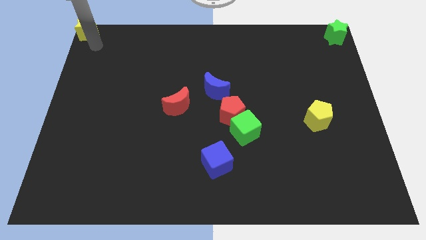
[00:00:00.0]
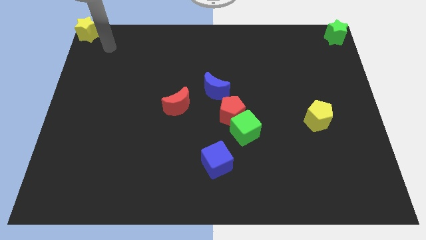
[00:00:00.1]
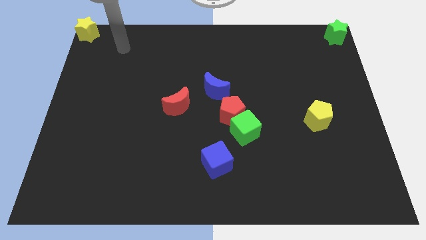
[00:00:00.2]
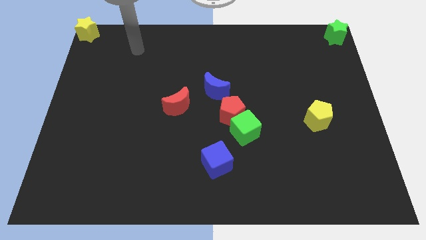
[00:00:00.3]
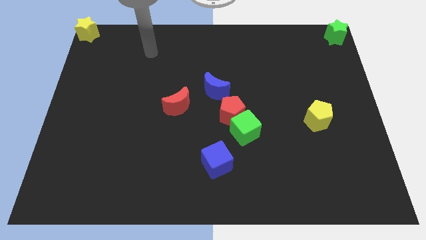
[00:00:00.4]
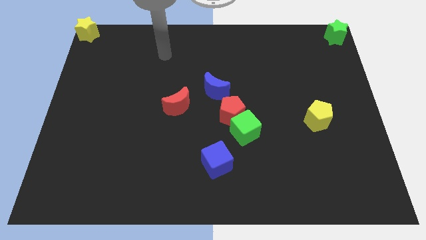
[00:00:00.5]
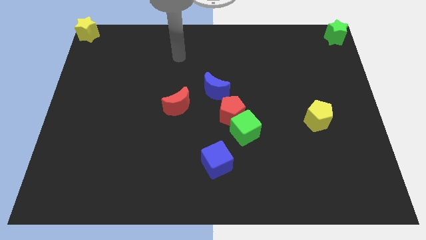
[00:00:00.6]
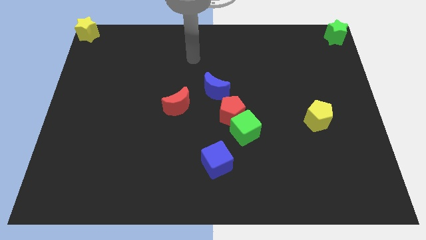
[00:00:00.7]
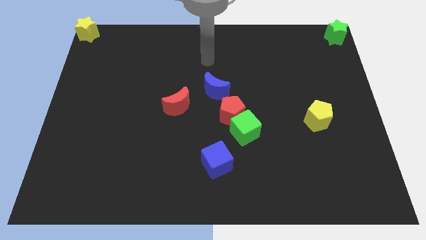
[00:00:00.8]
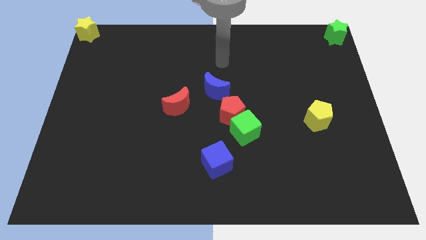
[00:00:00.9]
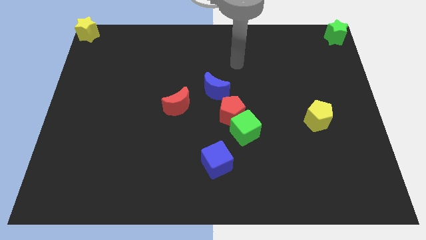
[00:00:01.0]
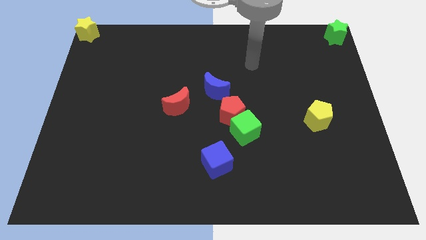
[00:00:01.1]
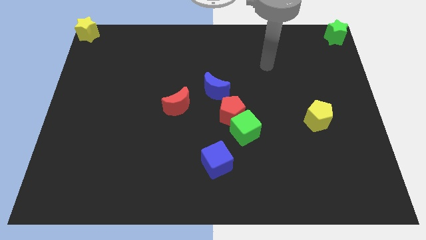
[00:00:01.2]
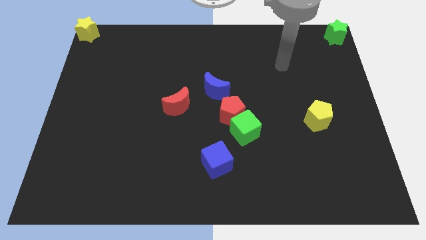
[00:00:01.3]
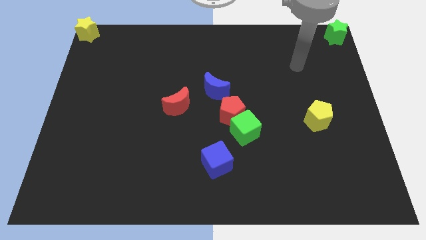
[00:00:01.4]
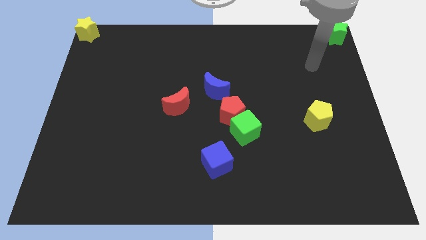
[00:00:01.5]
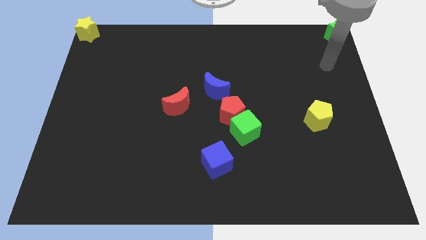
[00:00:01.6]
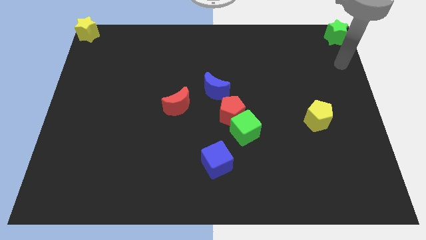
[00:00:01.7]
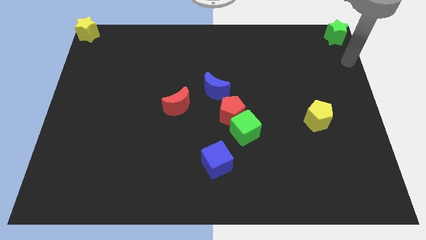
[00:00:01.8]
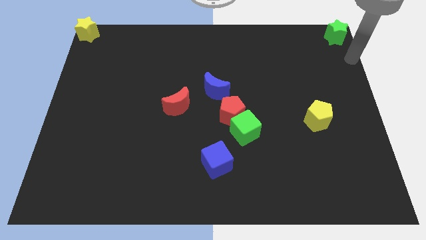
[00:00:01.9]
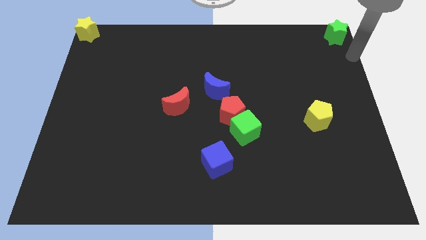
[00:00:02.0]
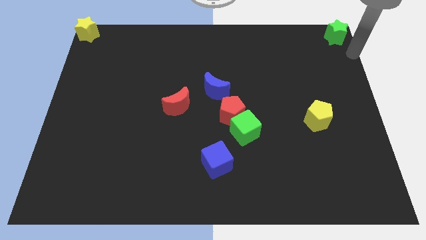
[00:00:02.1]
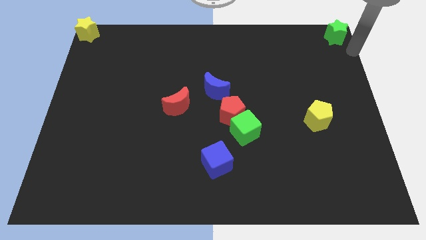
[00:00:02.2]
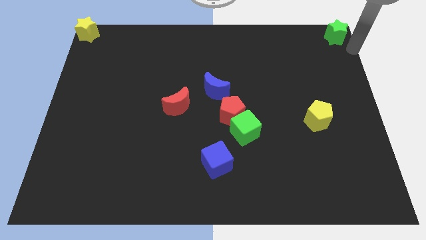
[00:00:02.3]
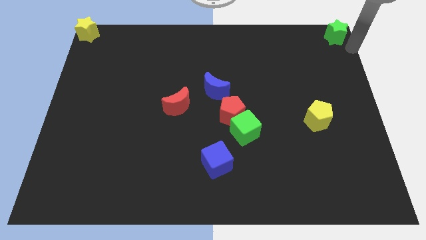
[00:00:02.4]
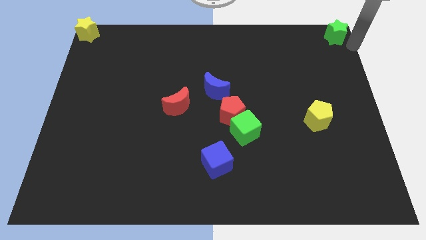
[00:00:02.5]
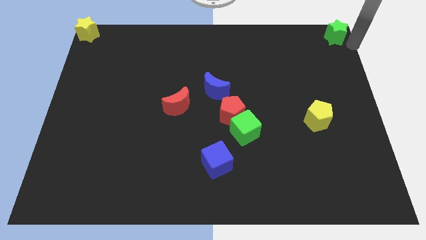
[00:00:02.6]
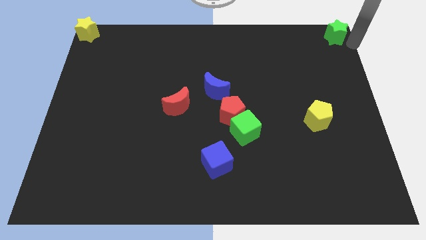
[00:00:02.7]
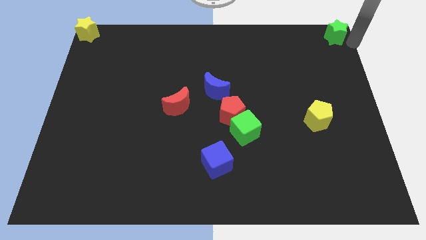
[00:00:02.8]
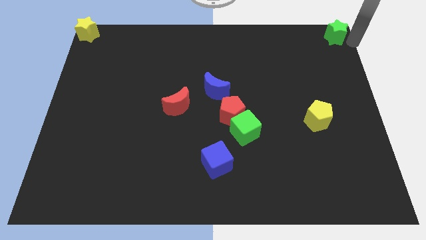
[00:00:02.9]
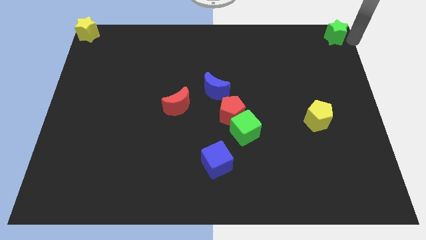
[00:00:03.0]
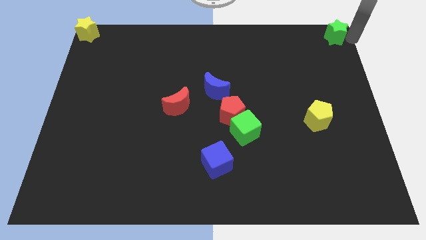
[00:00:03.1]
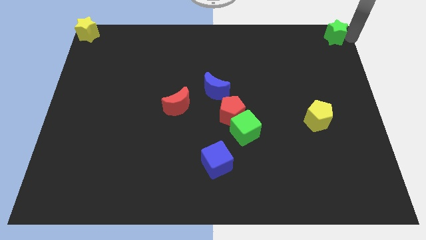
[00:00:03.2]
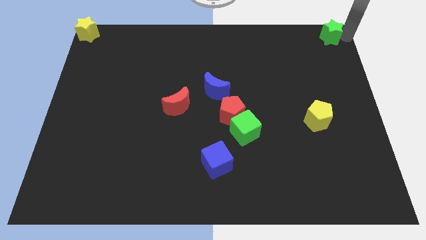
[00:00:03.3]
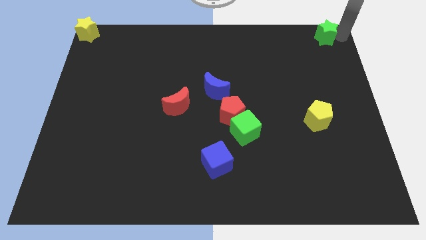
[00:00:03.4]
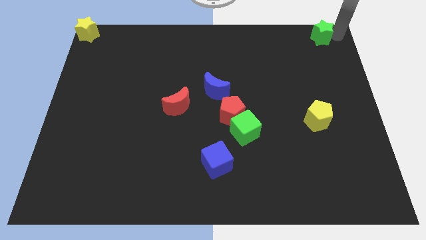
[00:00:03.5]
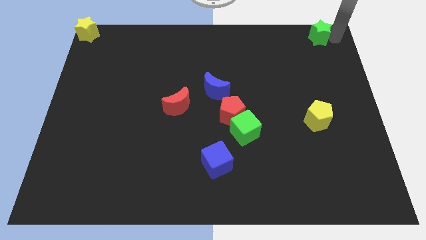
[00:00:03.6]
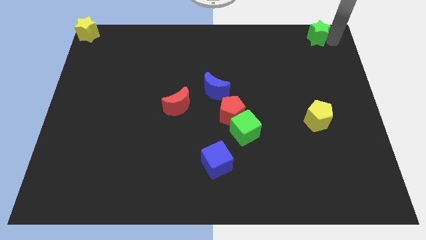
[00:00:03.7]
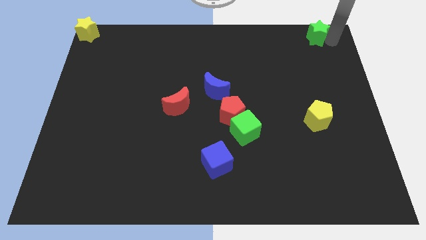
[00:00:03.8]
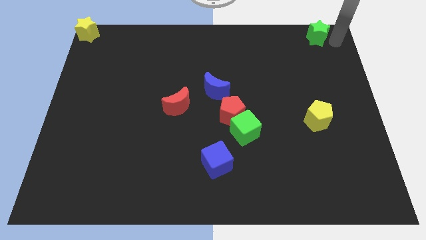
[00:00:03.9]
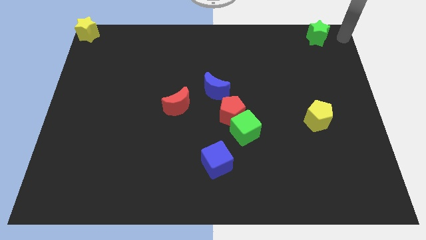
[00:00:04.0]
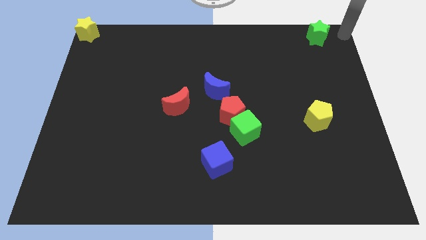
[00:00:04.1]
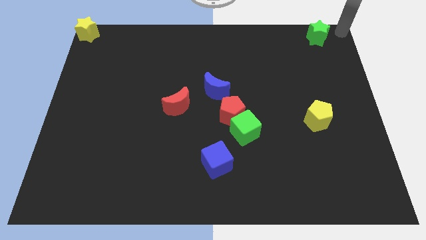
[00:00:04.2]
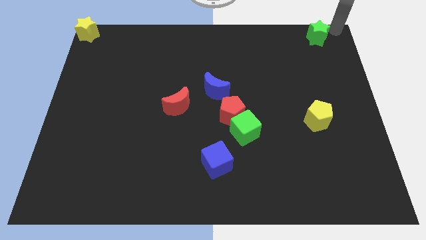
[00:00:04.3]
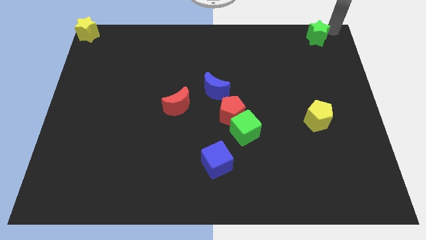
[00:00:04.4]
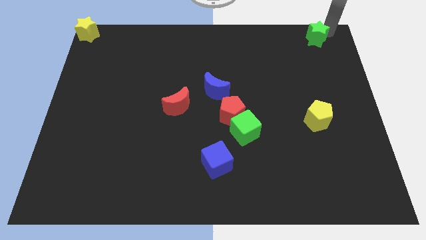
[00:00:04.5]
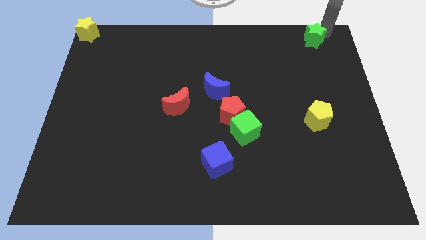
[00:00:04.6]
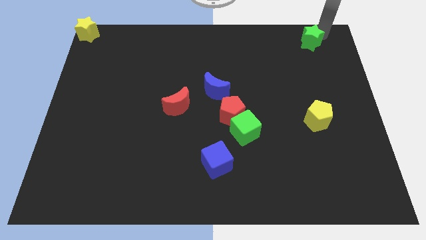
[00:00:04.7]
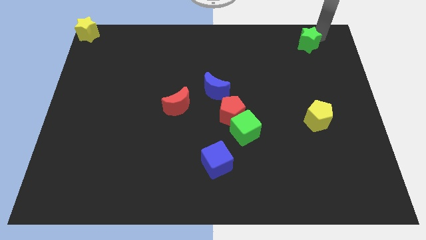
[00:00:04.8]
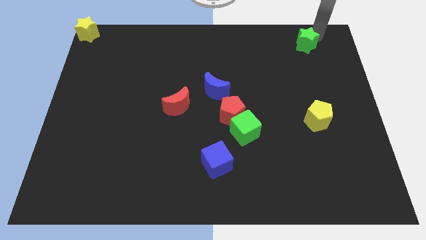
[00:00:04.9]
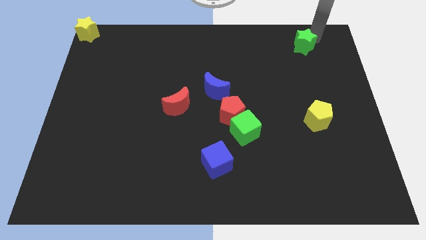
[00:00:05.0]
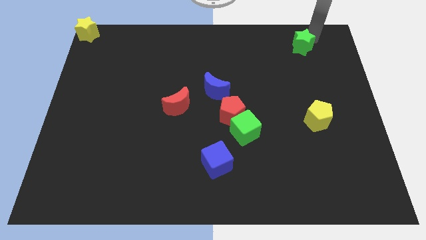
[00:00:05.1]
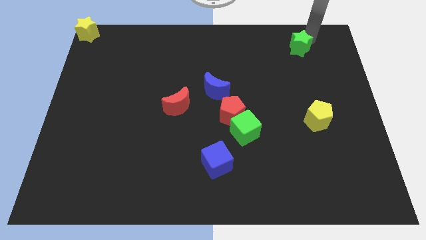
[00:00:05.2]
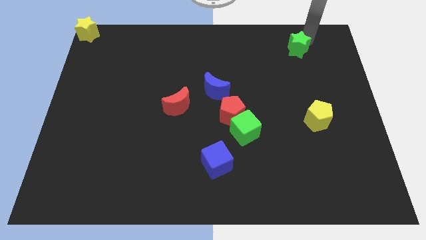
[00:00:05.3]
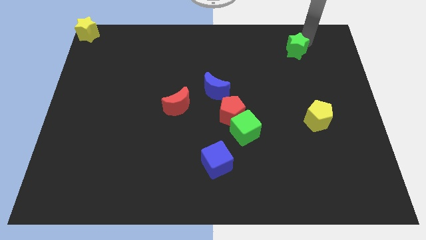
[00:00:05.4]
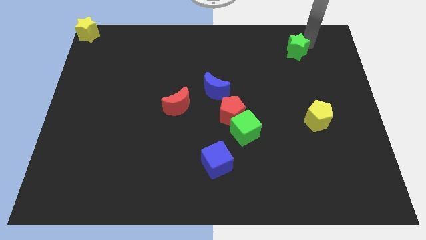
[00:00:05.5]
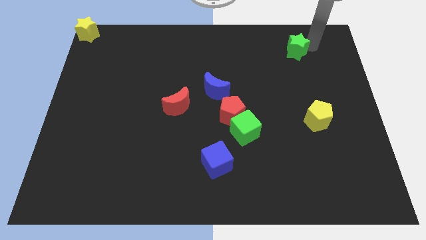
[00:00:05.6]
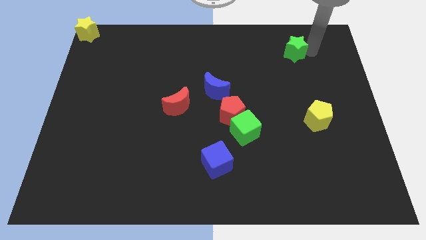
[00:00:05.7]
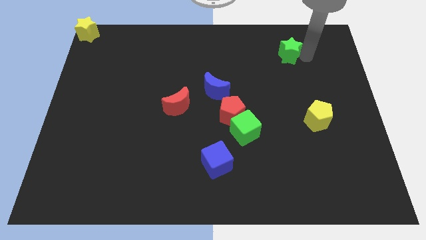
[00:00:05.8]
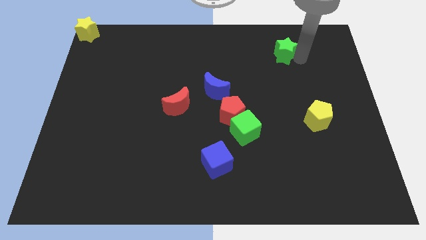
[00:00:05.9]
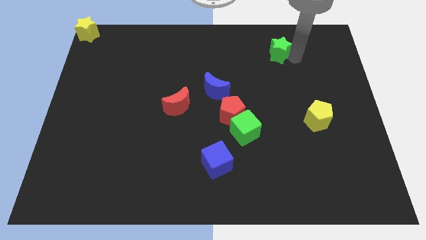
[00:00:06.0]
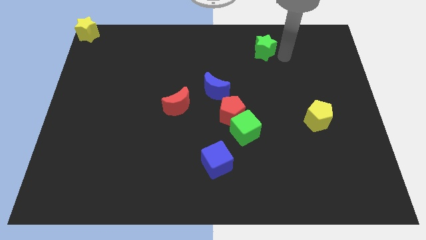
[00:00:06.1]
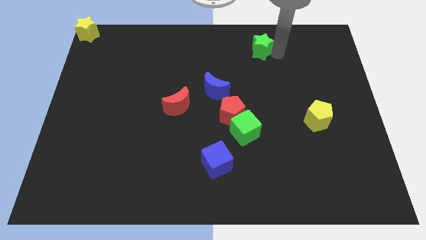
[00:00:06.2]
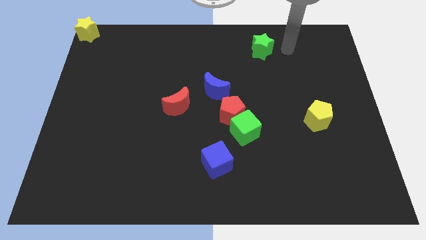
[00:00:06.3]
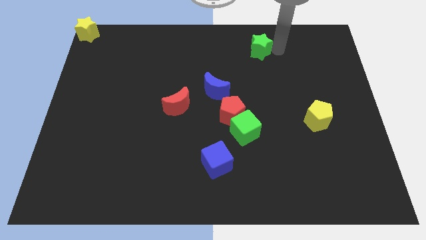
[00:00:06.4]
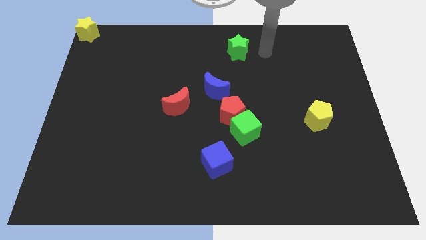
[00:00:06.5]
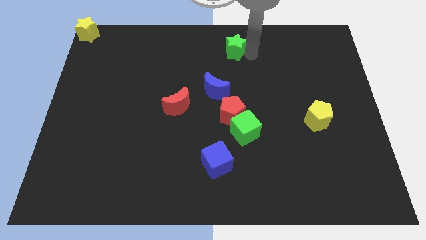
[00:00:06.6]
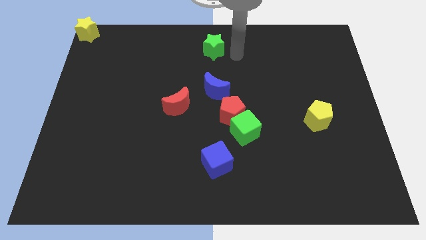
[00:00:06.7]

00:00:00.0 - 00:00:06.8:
slide the green star to the top center of the table

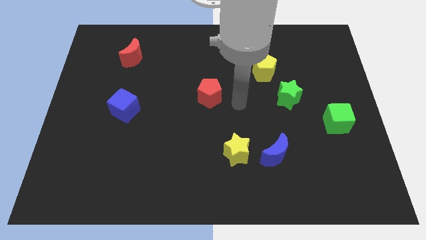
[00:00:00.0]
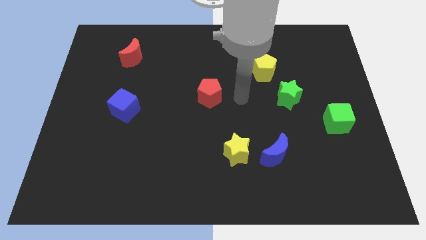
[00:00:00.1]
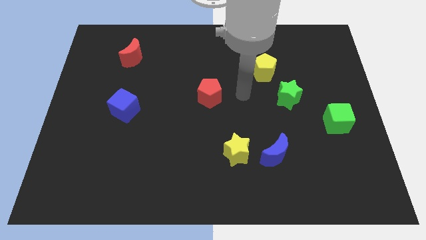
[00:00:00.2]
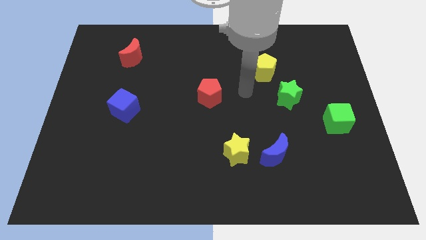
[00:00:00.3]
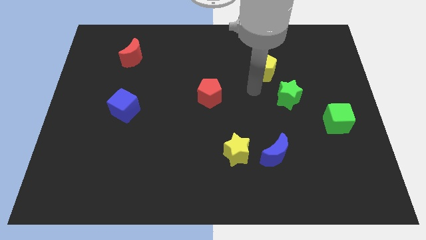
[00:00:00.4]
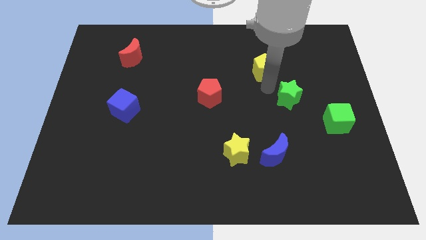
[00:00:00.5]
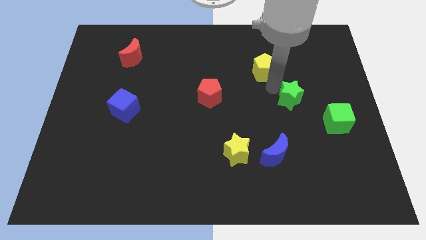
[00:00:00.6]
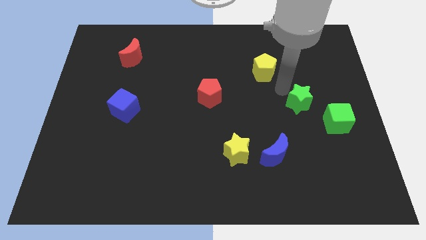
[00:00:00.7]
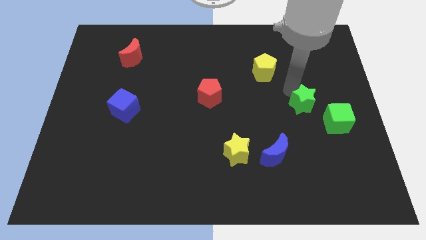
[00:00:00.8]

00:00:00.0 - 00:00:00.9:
touch the green star

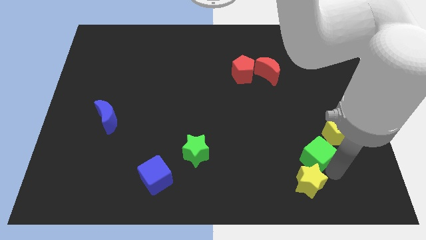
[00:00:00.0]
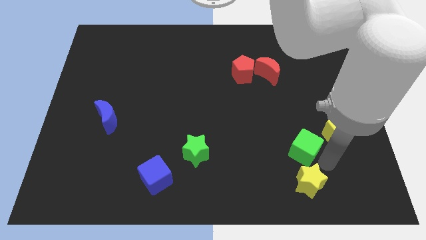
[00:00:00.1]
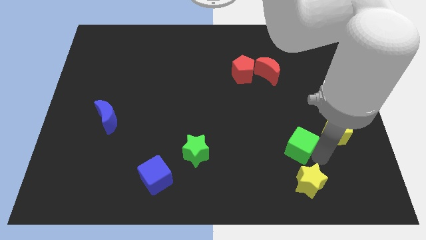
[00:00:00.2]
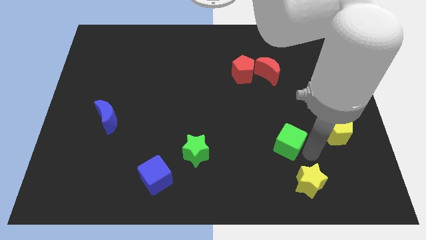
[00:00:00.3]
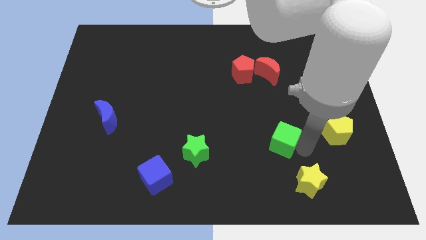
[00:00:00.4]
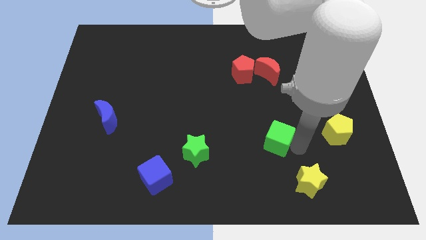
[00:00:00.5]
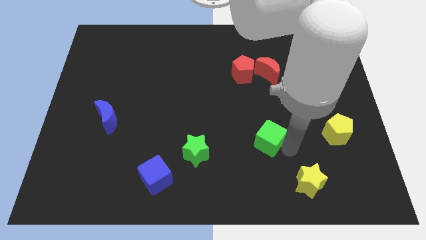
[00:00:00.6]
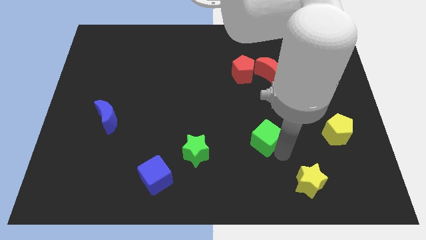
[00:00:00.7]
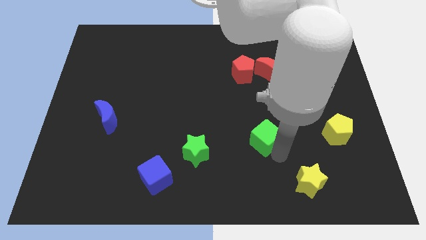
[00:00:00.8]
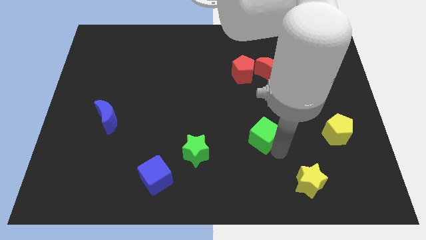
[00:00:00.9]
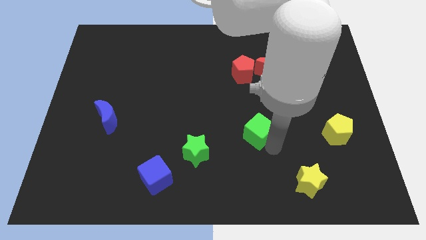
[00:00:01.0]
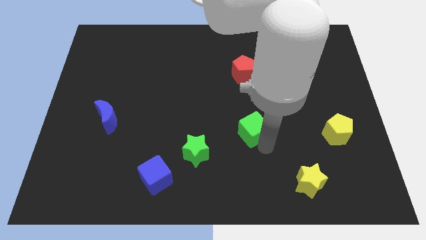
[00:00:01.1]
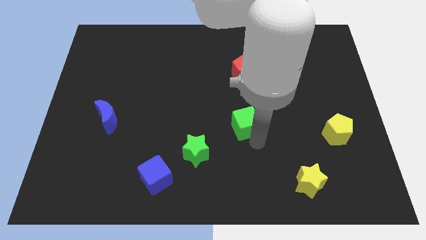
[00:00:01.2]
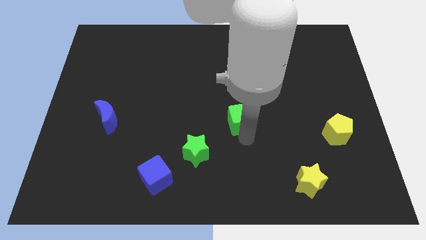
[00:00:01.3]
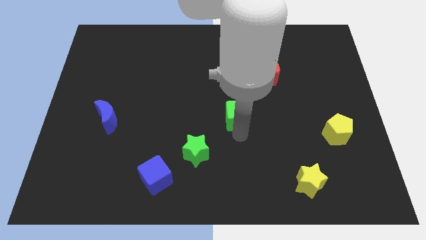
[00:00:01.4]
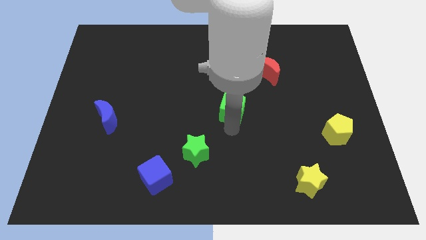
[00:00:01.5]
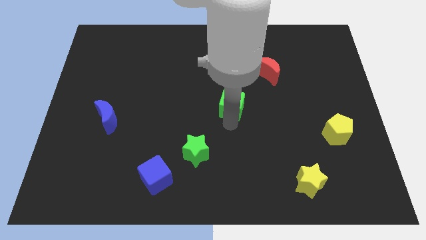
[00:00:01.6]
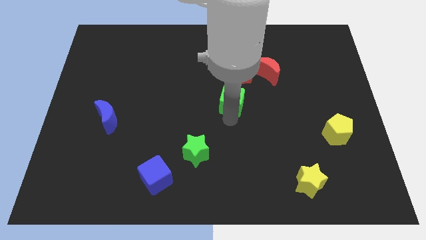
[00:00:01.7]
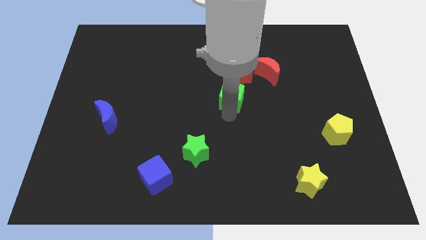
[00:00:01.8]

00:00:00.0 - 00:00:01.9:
separate the green cube from the yellow star
